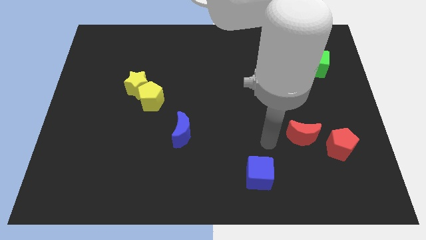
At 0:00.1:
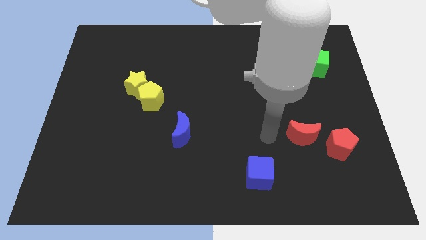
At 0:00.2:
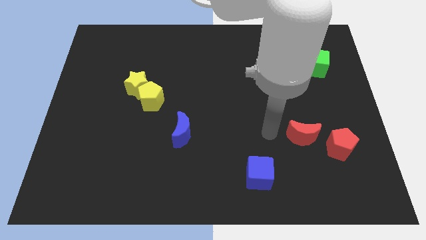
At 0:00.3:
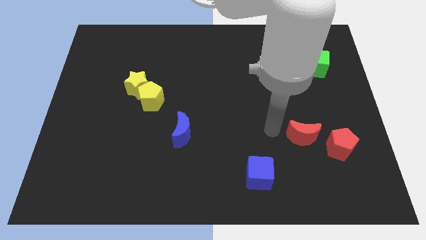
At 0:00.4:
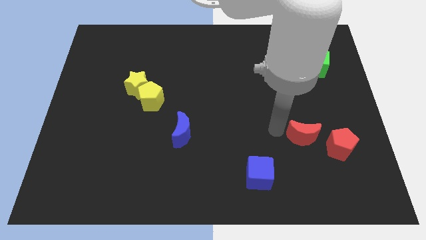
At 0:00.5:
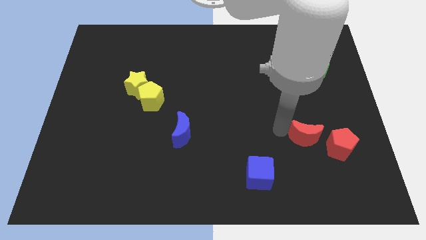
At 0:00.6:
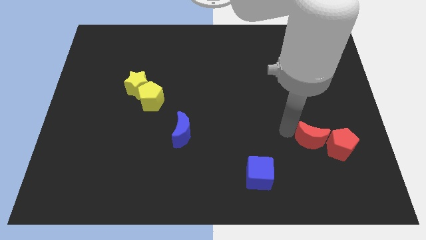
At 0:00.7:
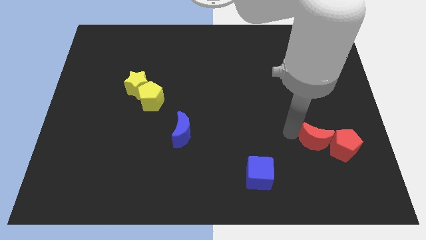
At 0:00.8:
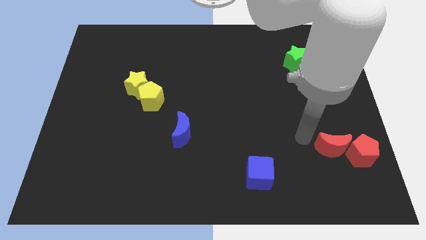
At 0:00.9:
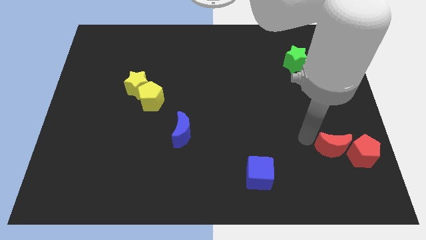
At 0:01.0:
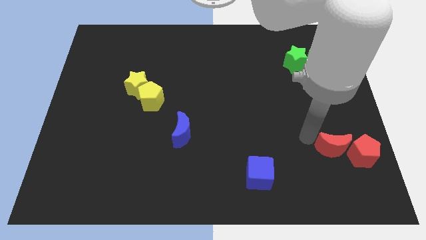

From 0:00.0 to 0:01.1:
move red crescent closer to the red pentagon

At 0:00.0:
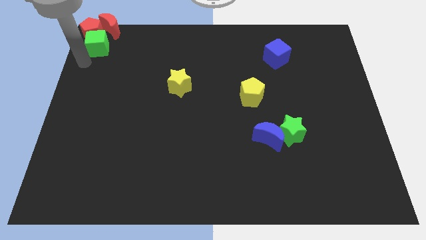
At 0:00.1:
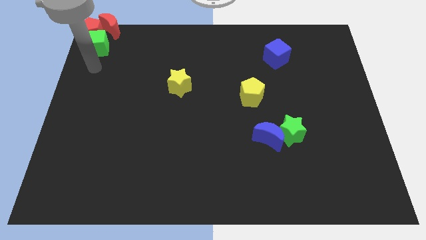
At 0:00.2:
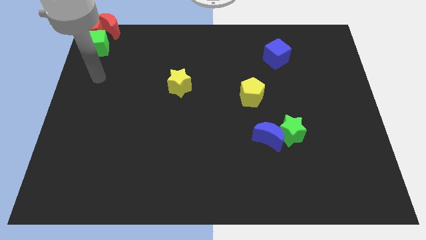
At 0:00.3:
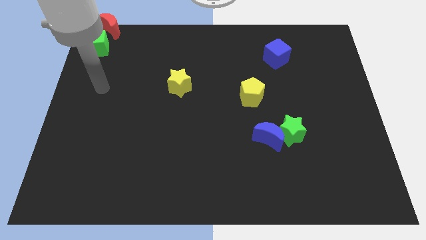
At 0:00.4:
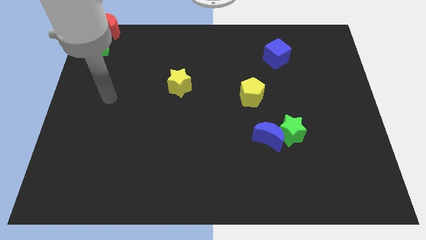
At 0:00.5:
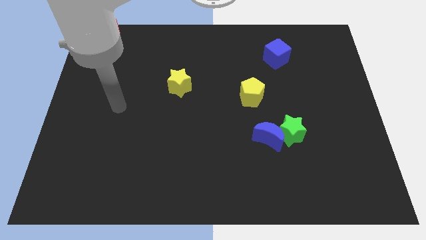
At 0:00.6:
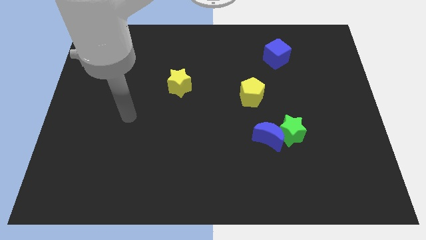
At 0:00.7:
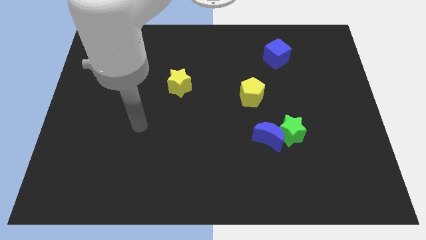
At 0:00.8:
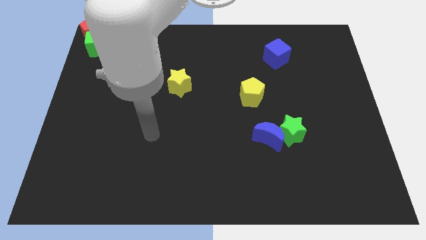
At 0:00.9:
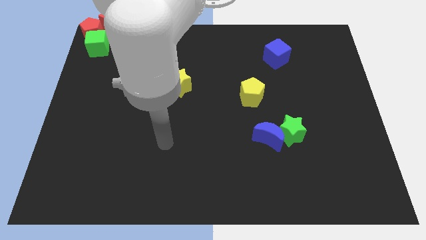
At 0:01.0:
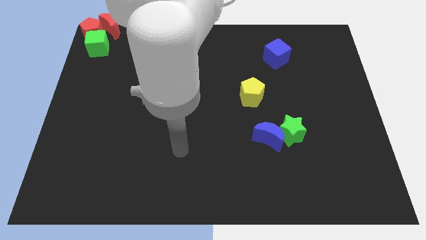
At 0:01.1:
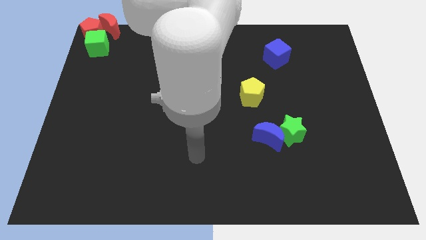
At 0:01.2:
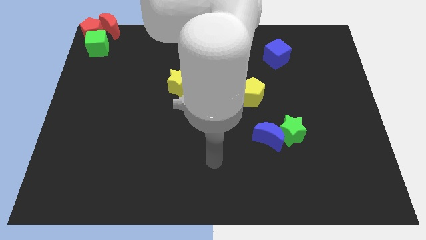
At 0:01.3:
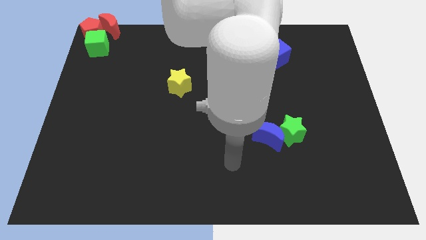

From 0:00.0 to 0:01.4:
move the arm away from the green cube

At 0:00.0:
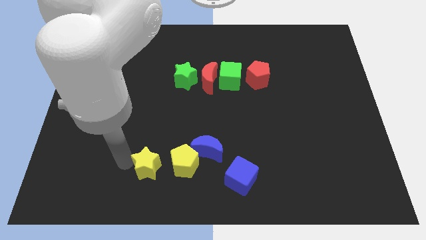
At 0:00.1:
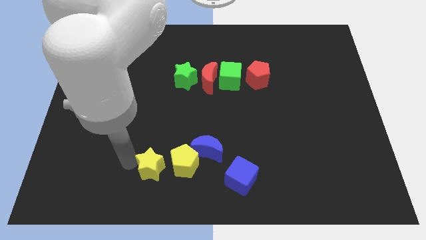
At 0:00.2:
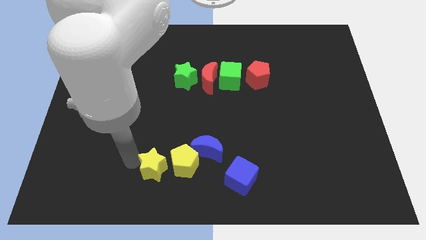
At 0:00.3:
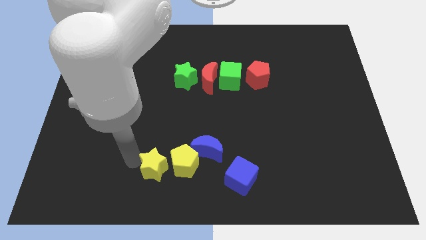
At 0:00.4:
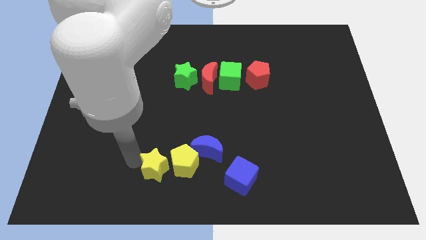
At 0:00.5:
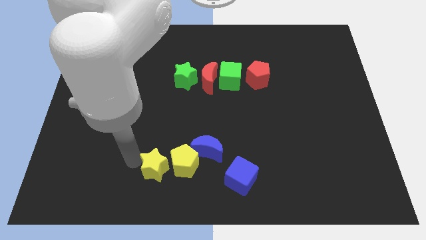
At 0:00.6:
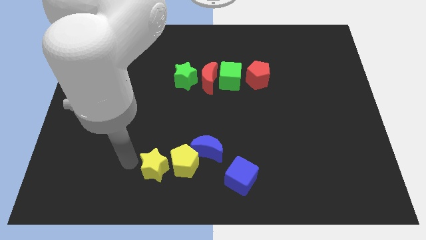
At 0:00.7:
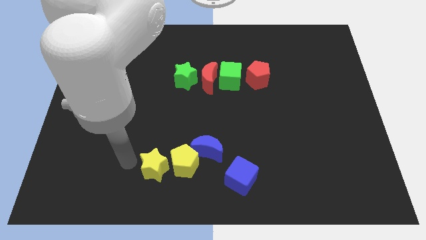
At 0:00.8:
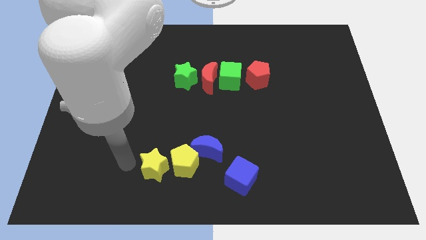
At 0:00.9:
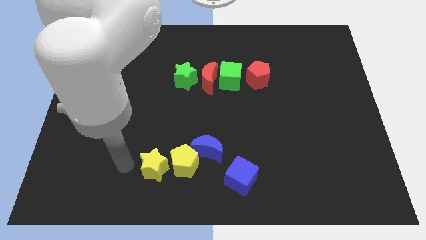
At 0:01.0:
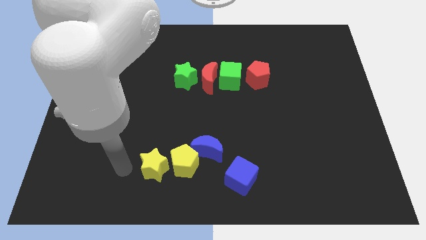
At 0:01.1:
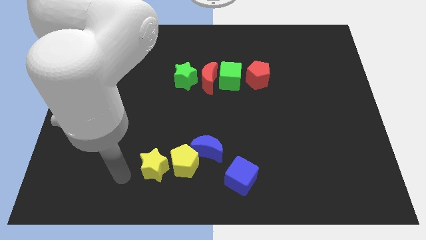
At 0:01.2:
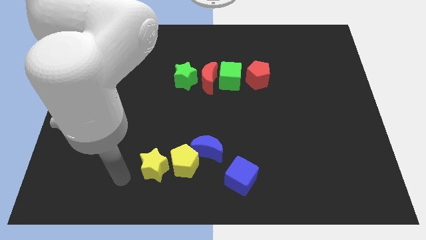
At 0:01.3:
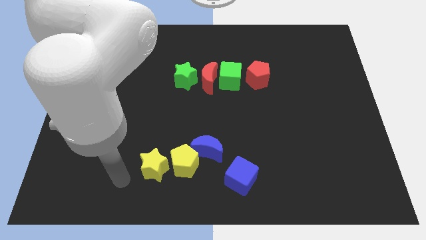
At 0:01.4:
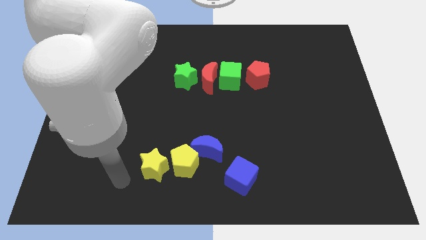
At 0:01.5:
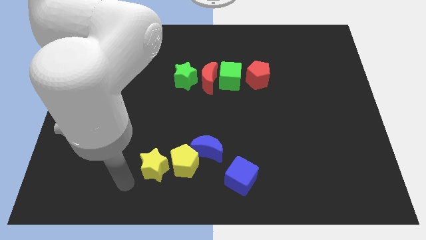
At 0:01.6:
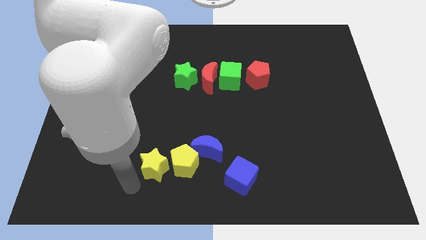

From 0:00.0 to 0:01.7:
push the yellow star to the left side of the yellow pentagon

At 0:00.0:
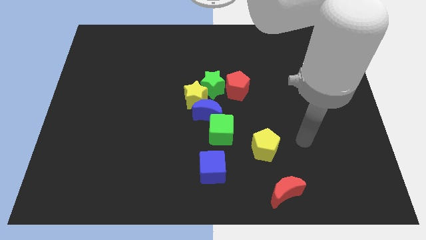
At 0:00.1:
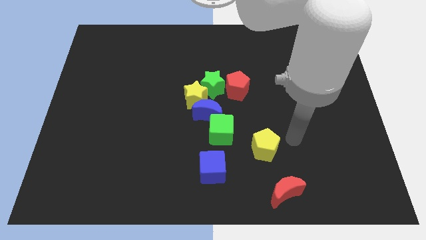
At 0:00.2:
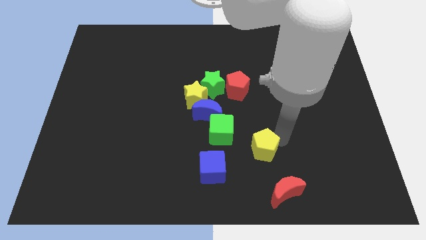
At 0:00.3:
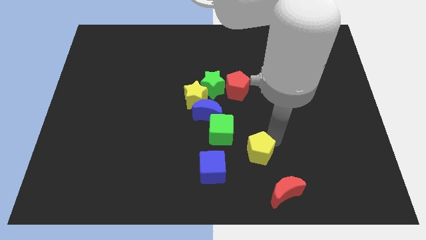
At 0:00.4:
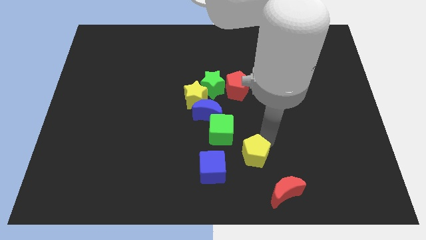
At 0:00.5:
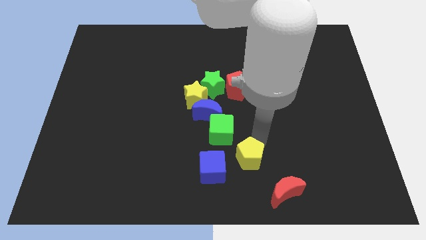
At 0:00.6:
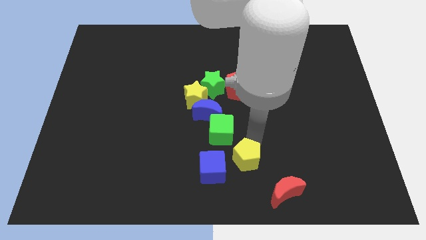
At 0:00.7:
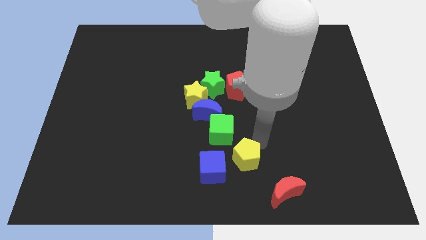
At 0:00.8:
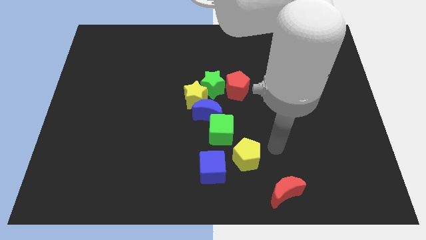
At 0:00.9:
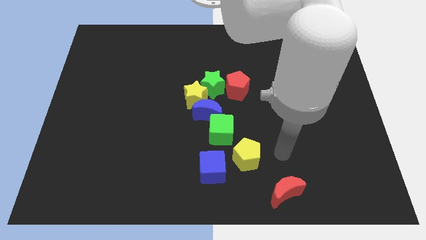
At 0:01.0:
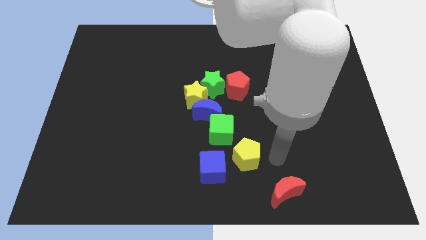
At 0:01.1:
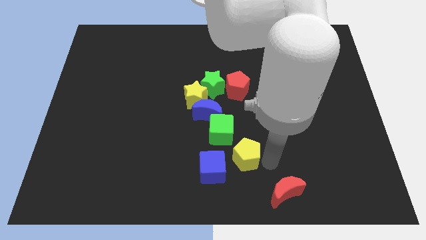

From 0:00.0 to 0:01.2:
push the yellow pentagon slightly towards the blue cube

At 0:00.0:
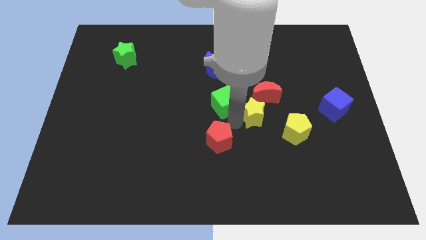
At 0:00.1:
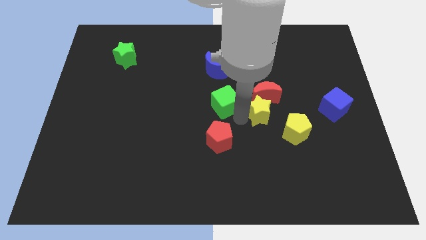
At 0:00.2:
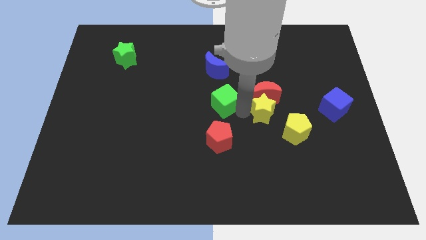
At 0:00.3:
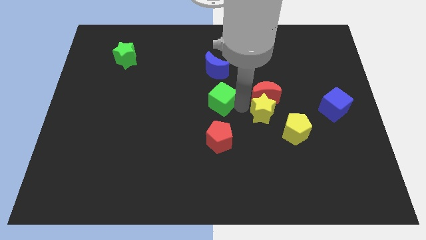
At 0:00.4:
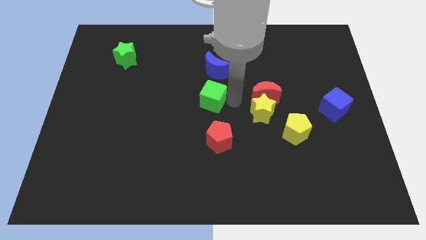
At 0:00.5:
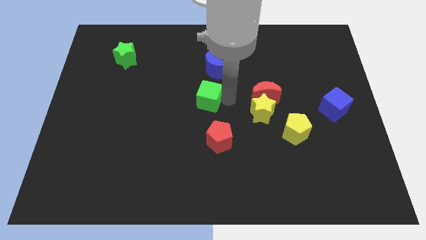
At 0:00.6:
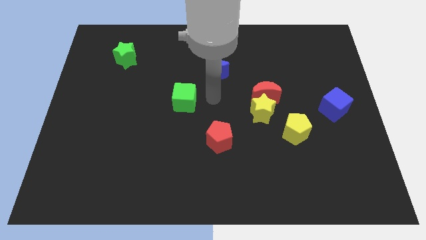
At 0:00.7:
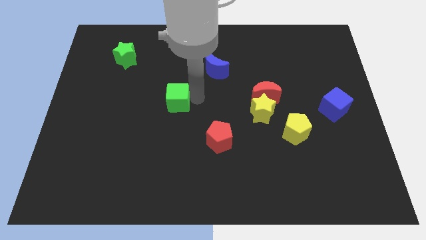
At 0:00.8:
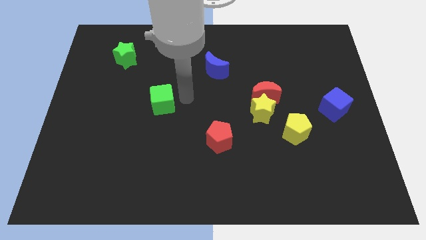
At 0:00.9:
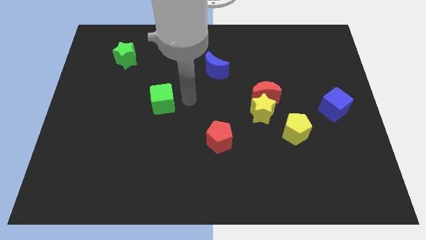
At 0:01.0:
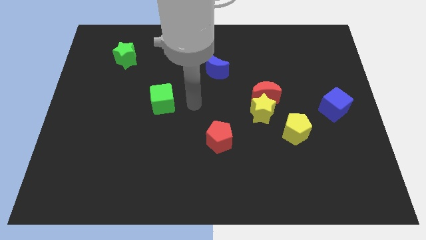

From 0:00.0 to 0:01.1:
drag the green cube to the left

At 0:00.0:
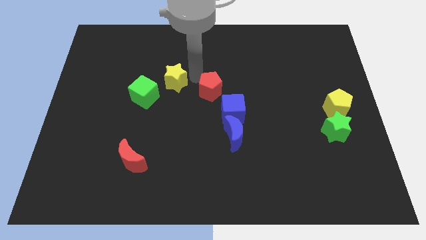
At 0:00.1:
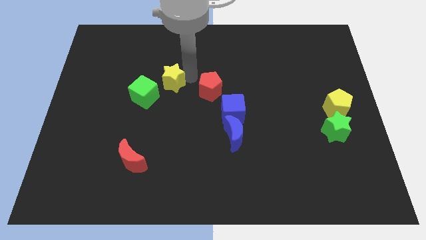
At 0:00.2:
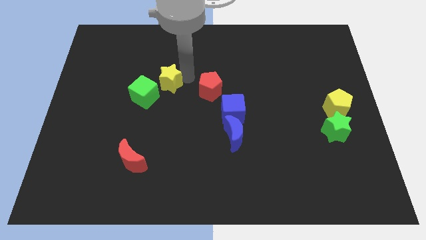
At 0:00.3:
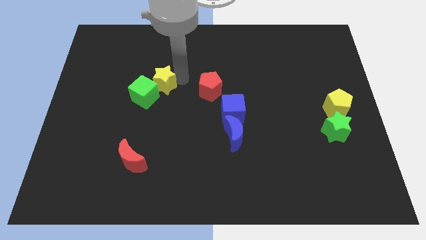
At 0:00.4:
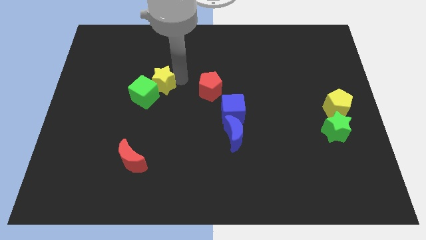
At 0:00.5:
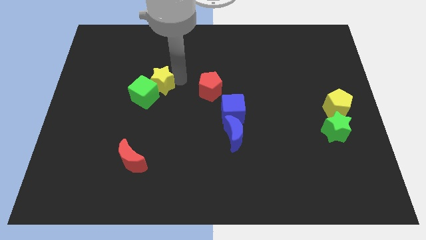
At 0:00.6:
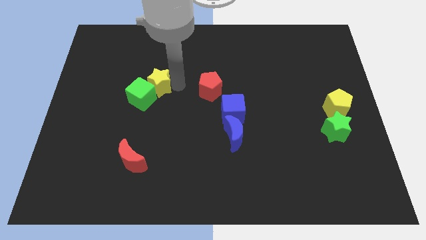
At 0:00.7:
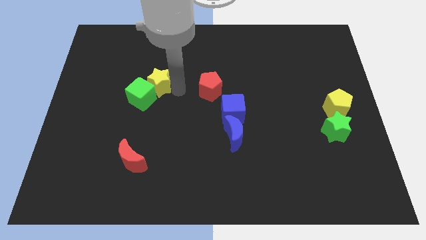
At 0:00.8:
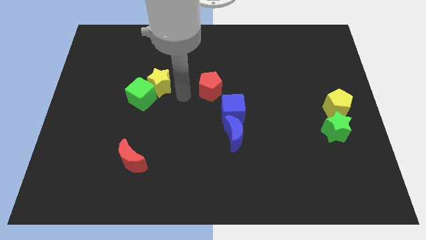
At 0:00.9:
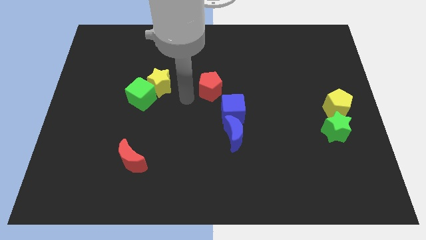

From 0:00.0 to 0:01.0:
push the yellow star into the green cube

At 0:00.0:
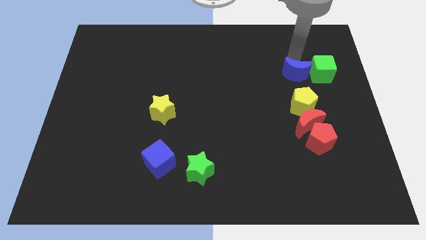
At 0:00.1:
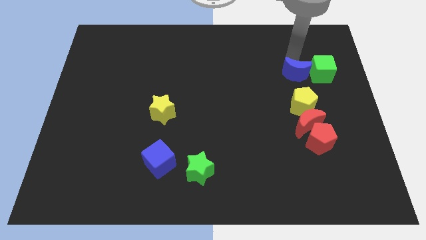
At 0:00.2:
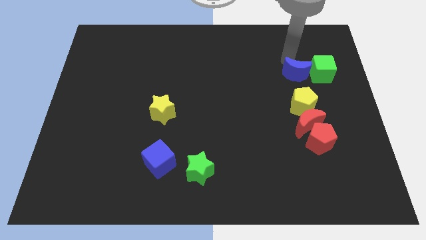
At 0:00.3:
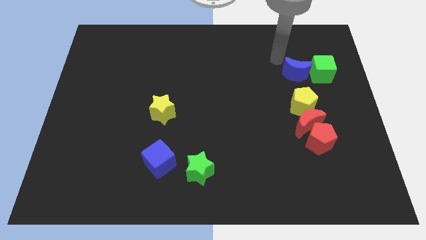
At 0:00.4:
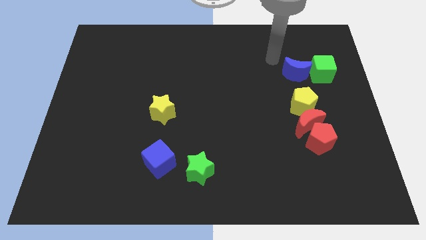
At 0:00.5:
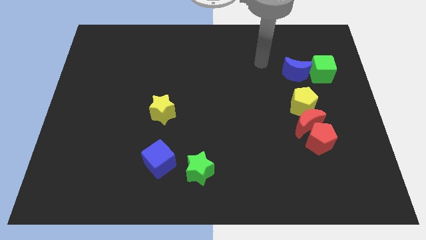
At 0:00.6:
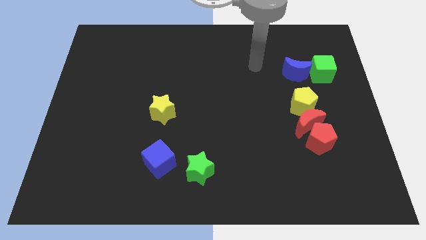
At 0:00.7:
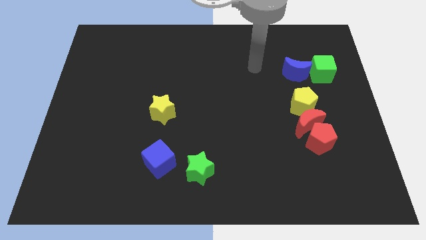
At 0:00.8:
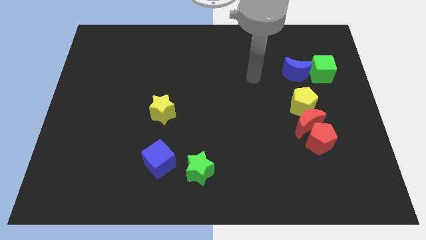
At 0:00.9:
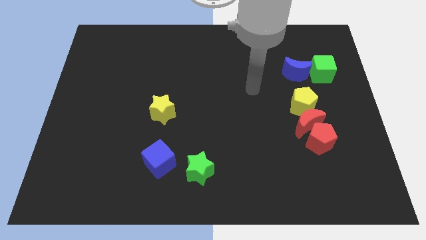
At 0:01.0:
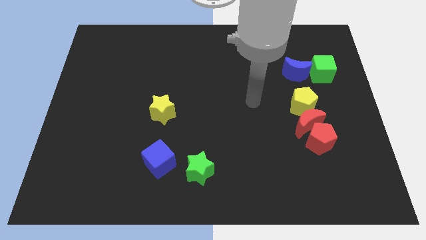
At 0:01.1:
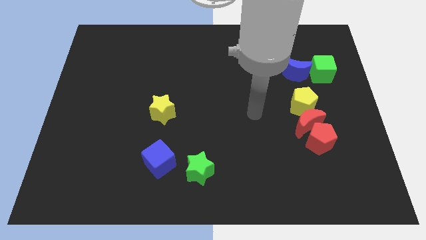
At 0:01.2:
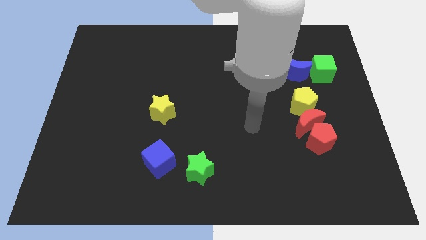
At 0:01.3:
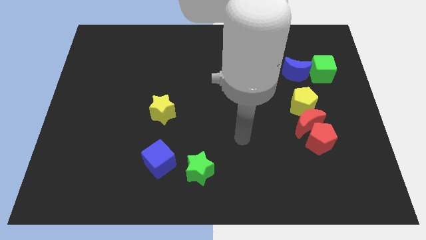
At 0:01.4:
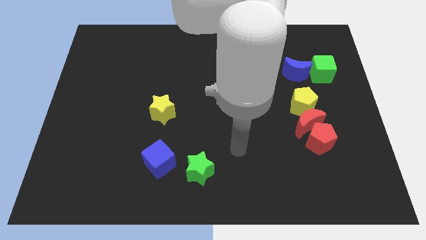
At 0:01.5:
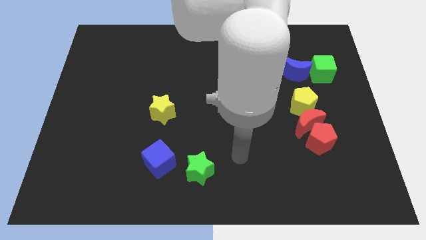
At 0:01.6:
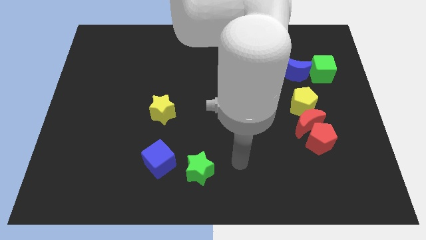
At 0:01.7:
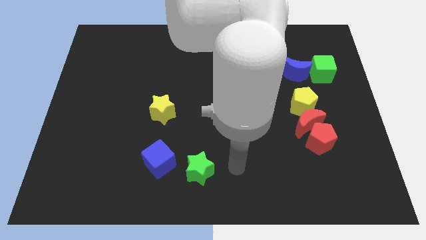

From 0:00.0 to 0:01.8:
move your arm towards the green star
